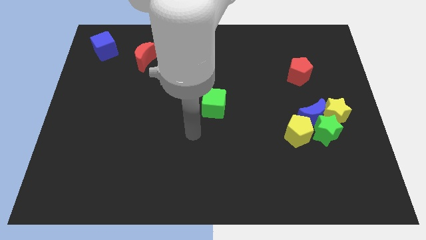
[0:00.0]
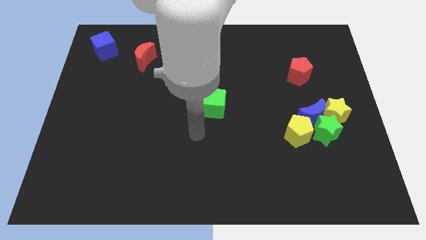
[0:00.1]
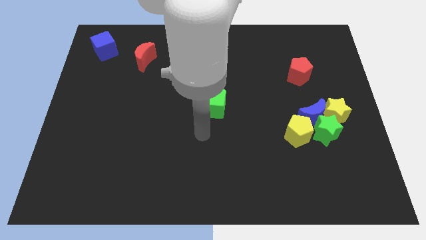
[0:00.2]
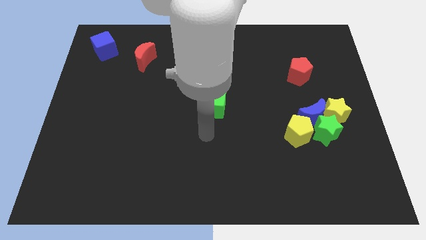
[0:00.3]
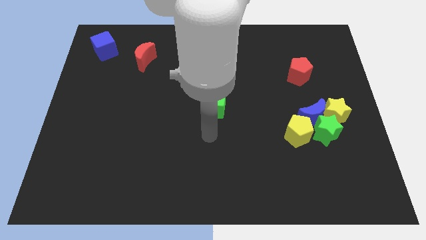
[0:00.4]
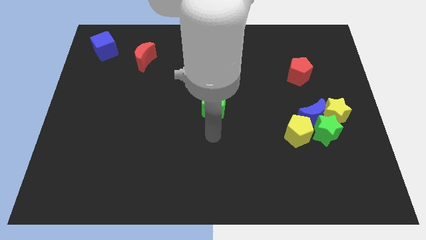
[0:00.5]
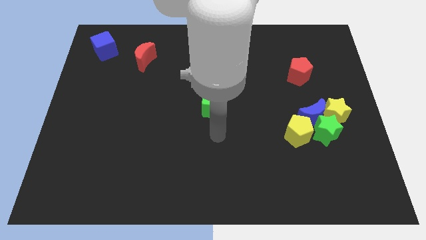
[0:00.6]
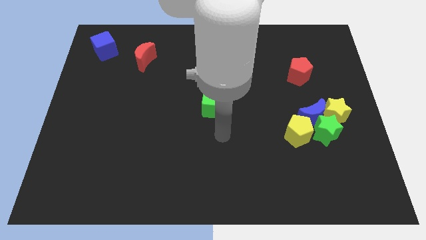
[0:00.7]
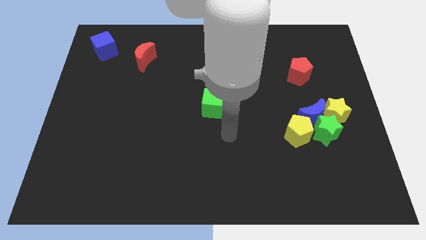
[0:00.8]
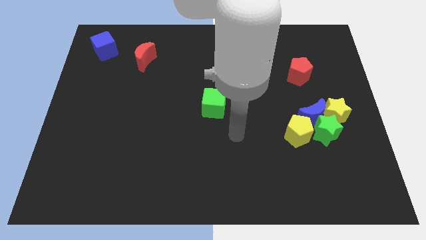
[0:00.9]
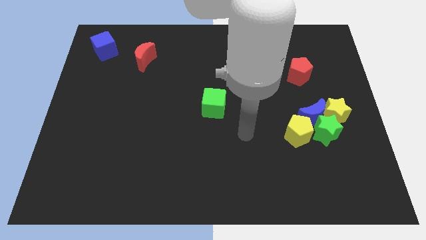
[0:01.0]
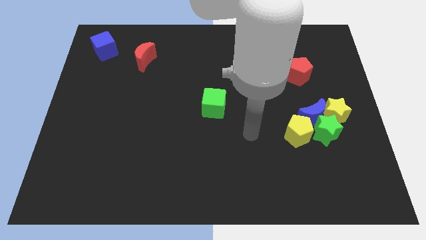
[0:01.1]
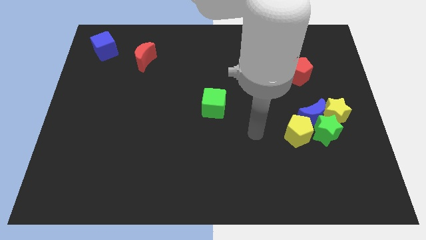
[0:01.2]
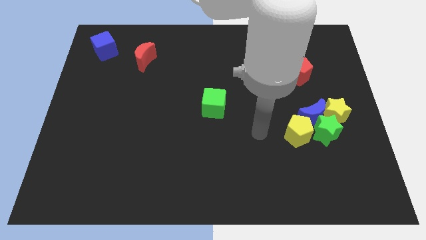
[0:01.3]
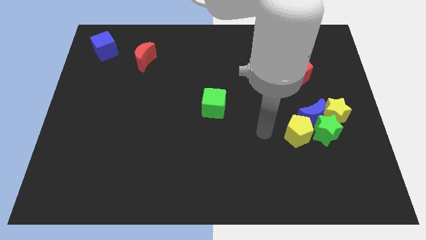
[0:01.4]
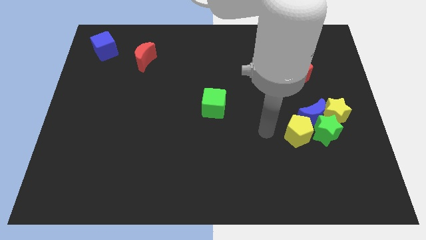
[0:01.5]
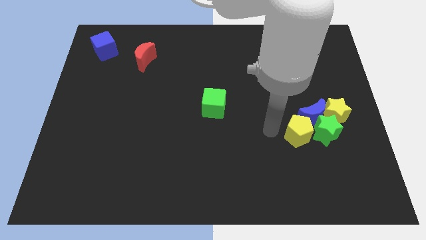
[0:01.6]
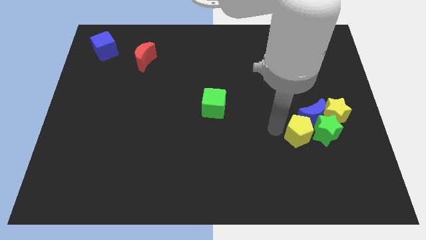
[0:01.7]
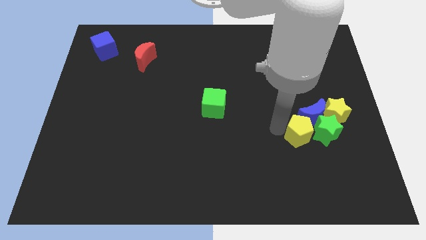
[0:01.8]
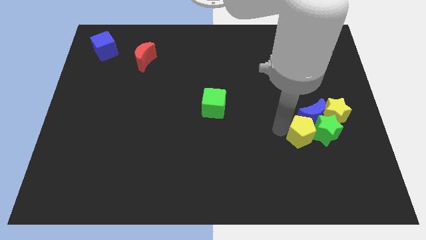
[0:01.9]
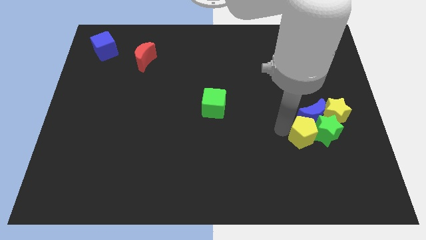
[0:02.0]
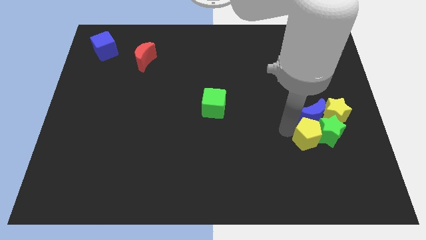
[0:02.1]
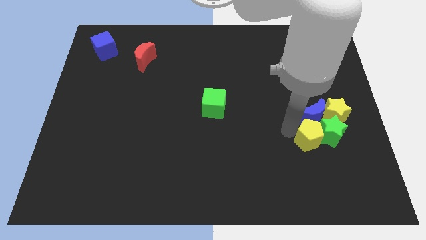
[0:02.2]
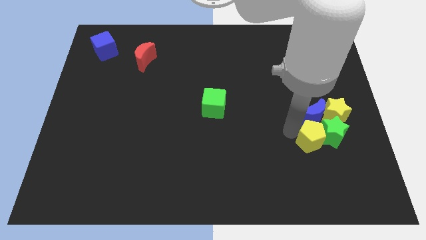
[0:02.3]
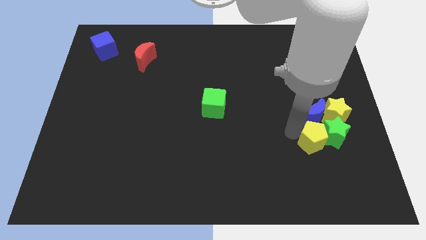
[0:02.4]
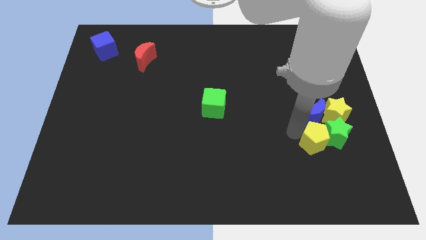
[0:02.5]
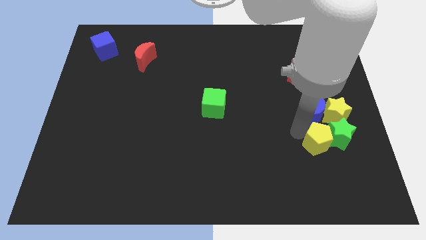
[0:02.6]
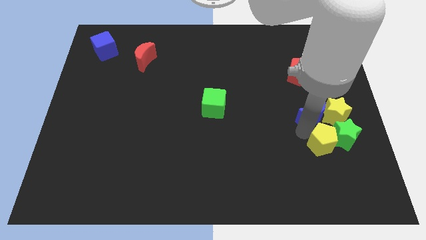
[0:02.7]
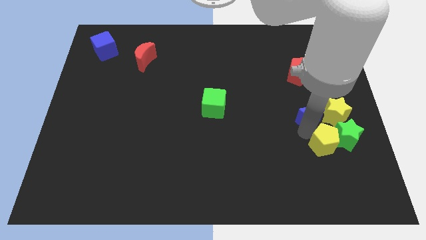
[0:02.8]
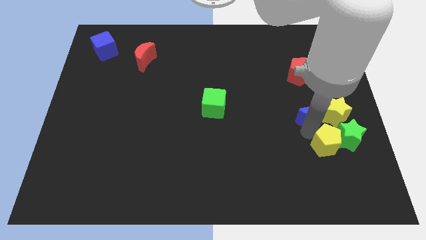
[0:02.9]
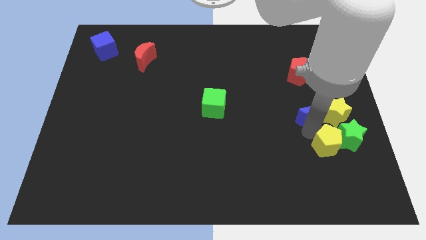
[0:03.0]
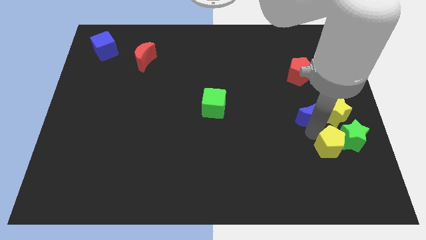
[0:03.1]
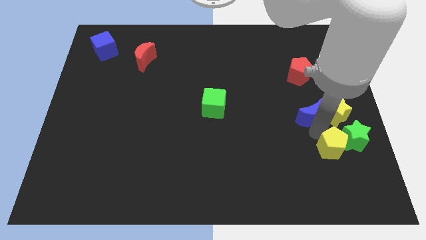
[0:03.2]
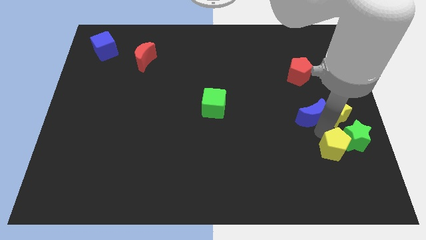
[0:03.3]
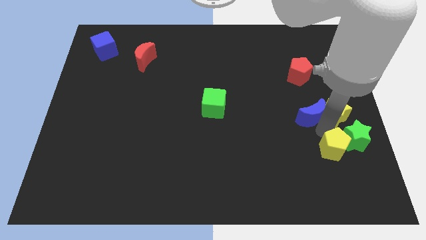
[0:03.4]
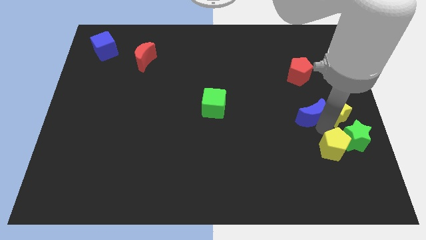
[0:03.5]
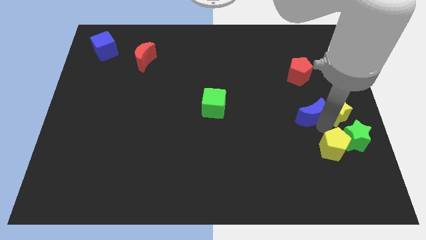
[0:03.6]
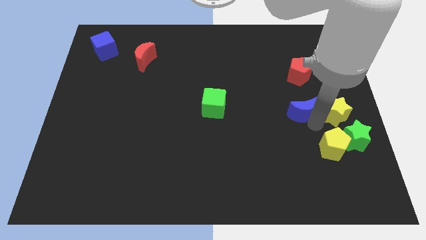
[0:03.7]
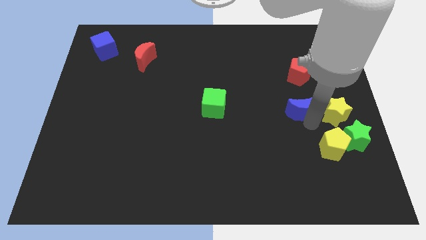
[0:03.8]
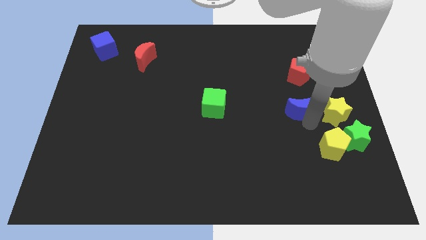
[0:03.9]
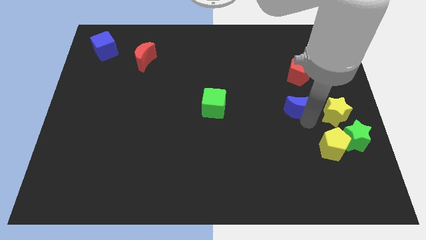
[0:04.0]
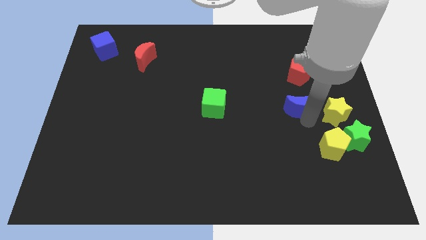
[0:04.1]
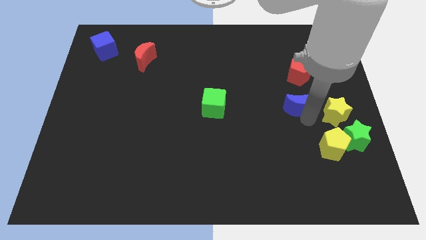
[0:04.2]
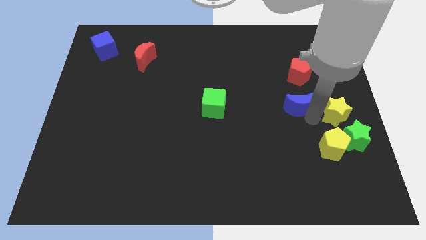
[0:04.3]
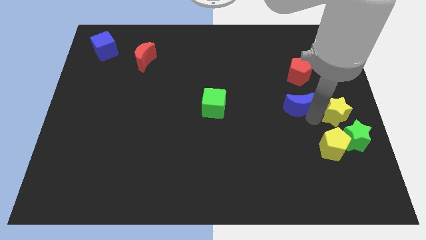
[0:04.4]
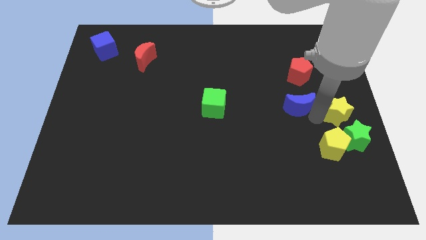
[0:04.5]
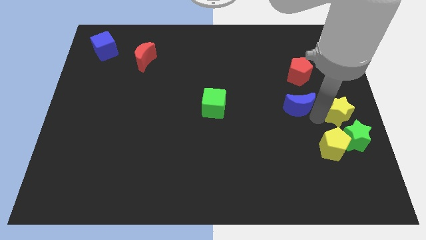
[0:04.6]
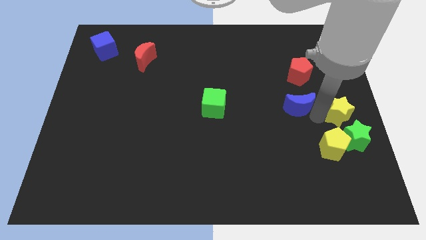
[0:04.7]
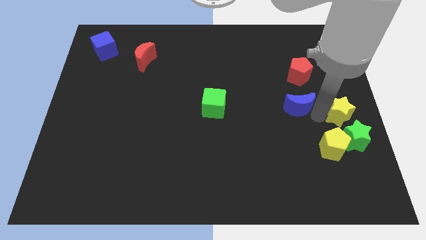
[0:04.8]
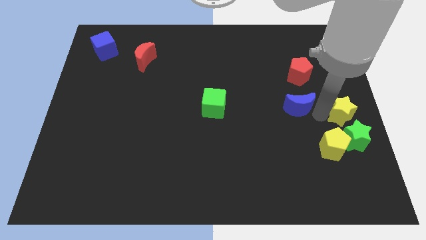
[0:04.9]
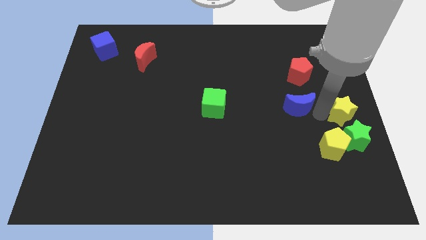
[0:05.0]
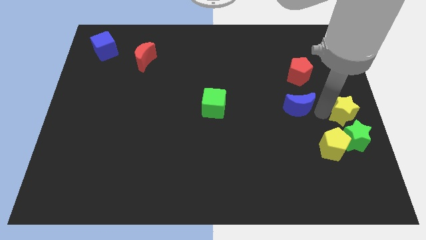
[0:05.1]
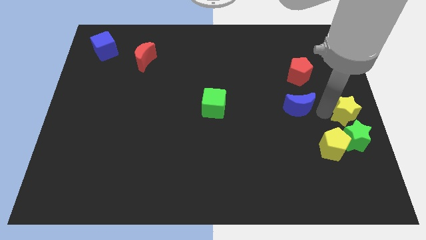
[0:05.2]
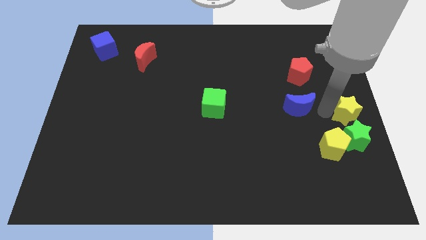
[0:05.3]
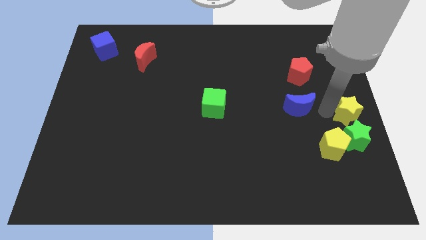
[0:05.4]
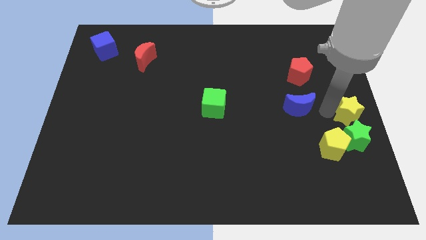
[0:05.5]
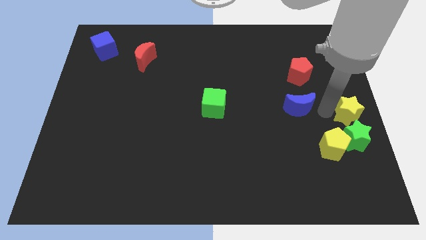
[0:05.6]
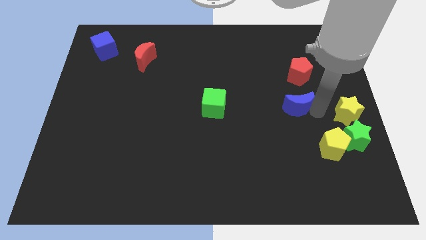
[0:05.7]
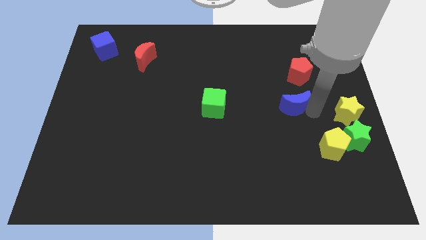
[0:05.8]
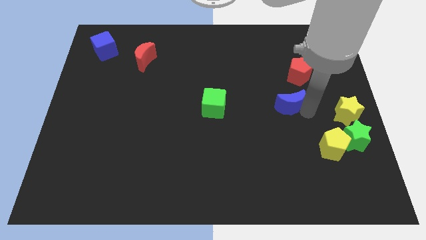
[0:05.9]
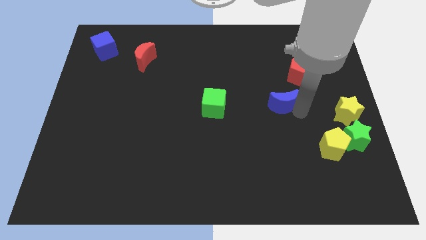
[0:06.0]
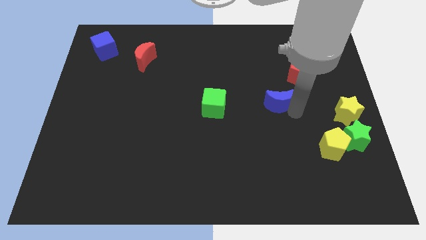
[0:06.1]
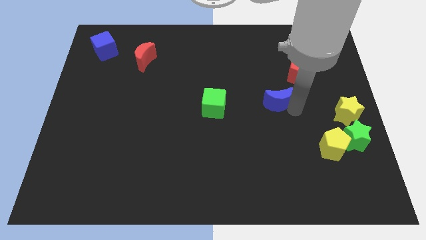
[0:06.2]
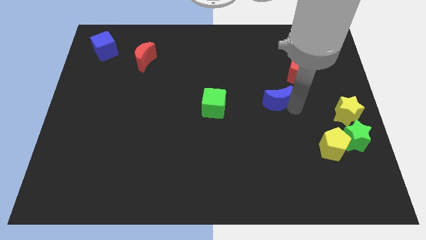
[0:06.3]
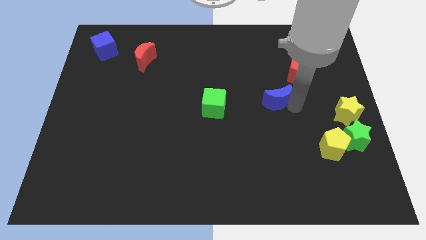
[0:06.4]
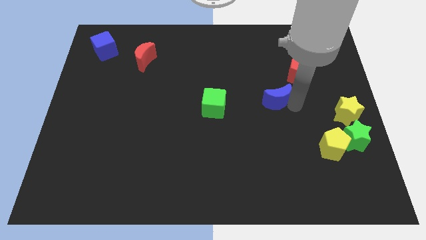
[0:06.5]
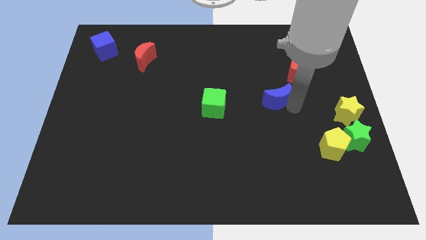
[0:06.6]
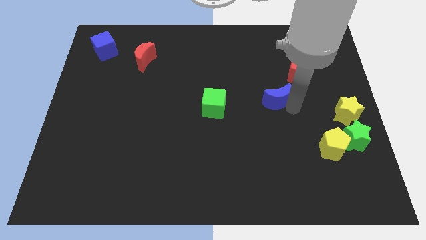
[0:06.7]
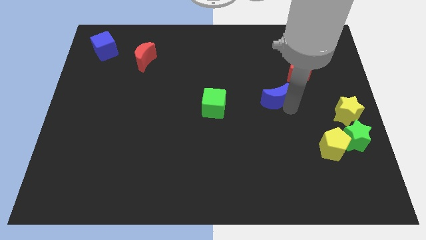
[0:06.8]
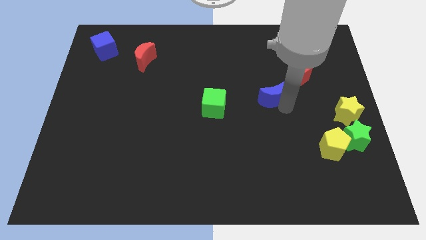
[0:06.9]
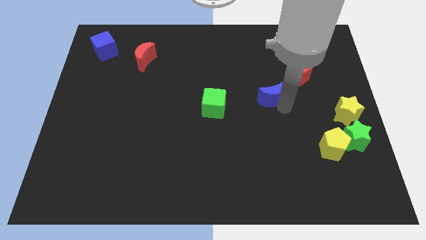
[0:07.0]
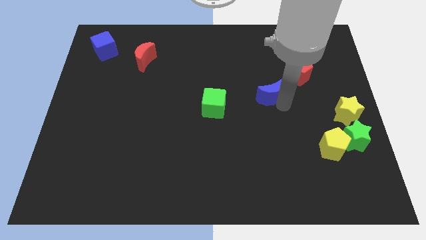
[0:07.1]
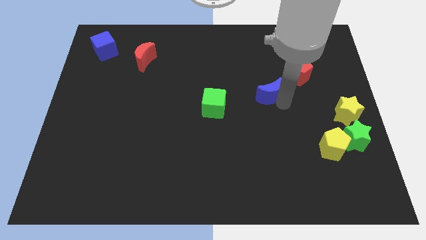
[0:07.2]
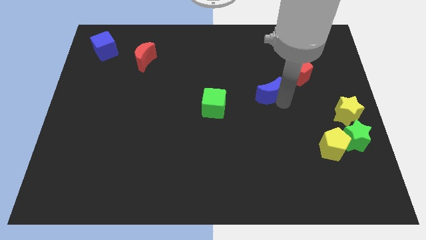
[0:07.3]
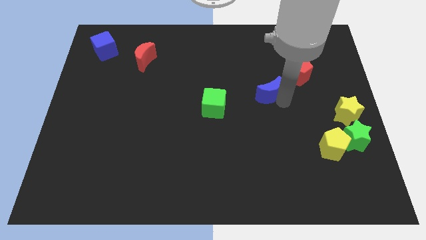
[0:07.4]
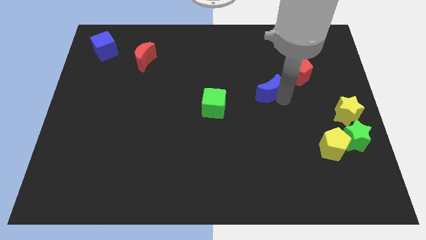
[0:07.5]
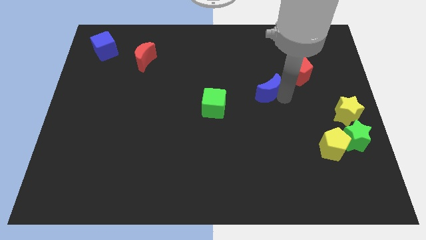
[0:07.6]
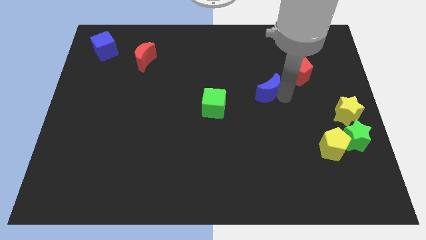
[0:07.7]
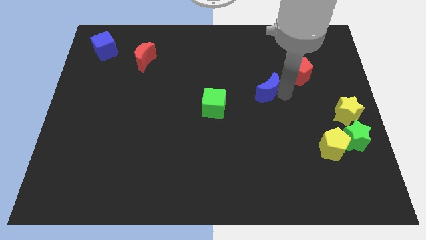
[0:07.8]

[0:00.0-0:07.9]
separate the blue moon from the group of blocks

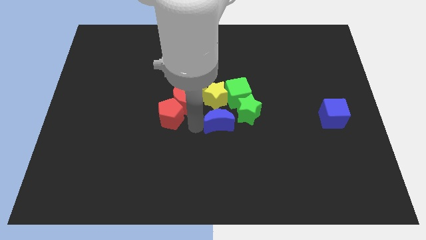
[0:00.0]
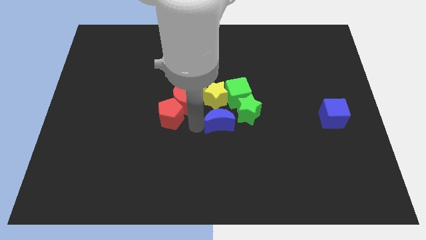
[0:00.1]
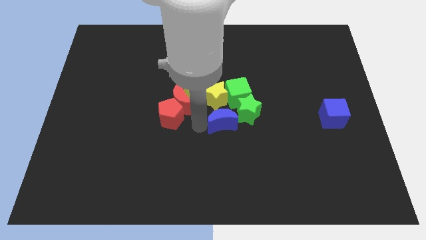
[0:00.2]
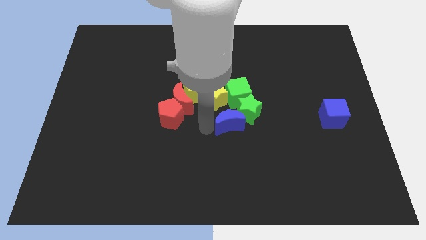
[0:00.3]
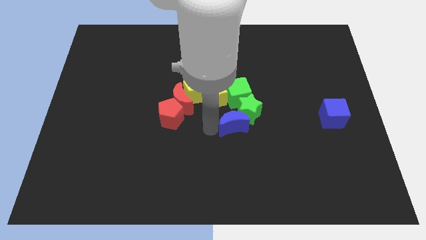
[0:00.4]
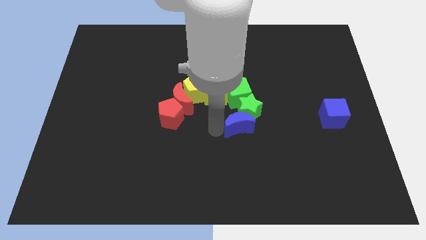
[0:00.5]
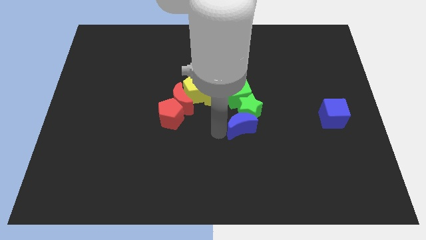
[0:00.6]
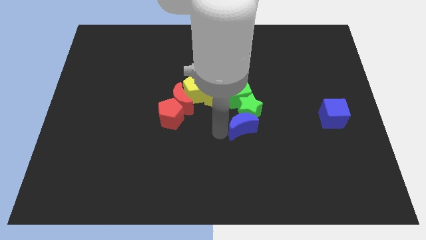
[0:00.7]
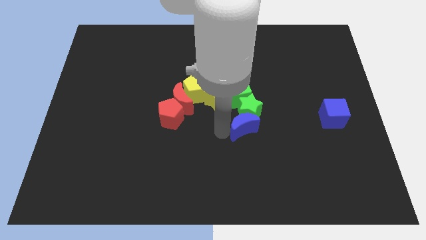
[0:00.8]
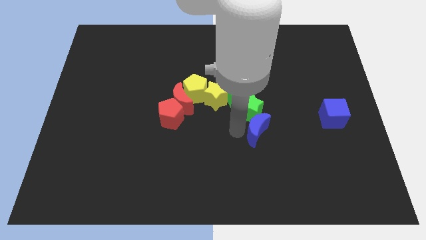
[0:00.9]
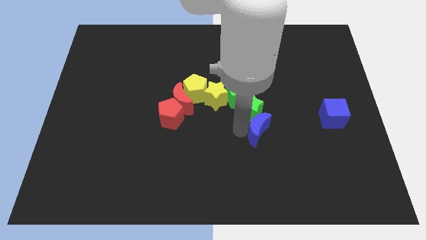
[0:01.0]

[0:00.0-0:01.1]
push the blue crescent to the bottom of the green star
